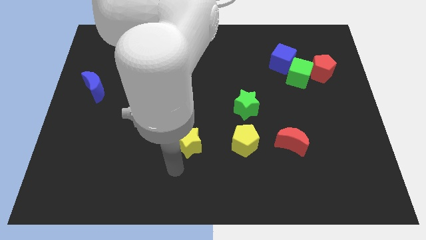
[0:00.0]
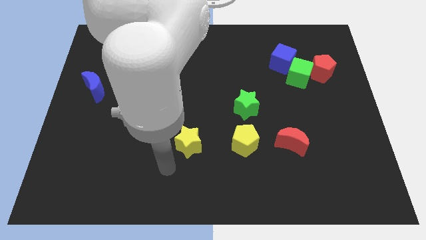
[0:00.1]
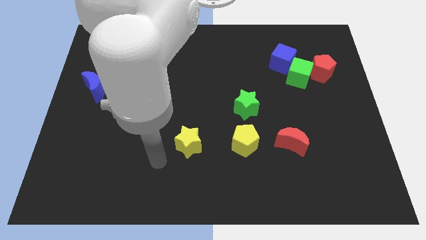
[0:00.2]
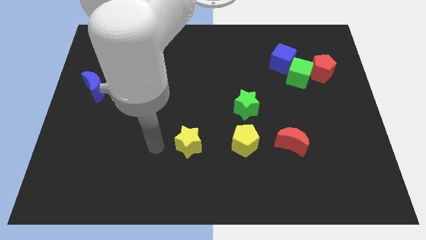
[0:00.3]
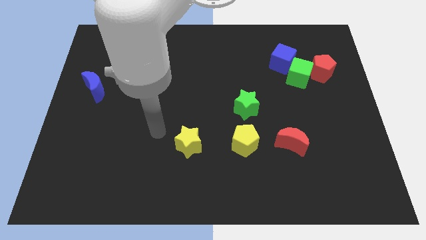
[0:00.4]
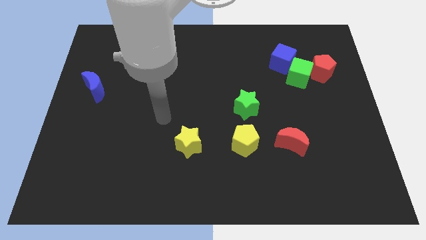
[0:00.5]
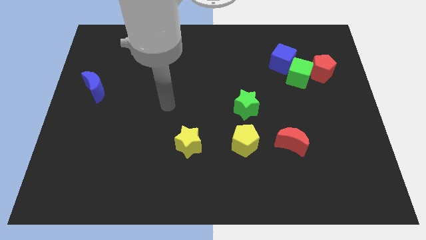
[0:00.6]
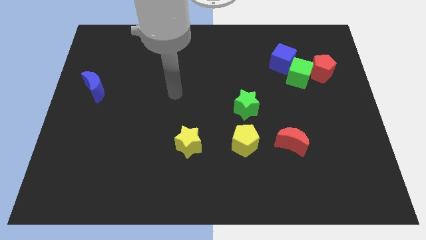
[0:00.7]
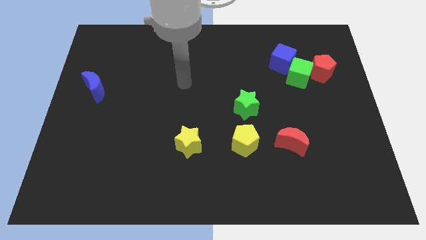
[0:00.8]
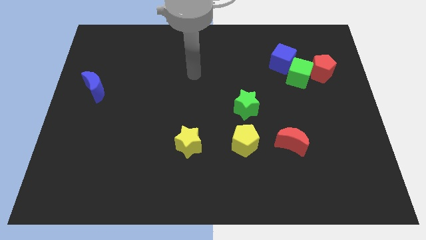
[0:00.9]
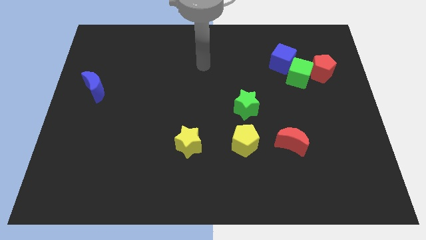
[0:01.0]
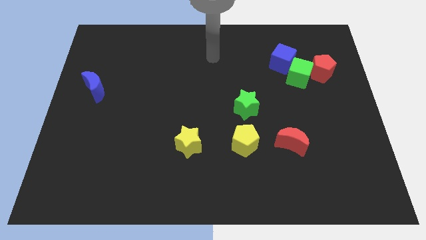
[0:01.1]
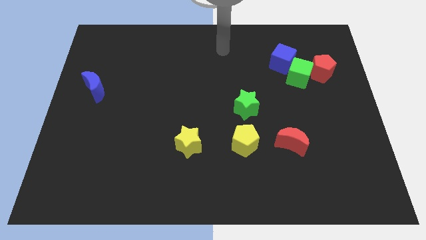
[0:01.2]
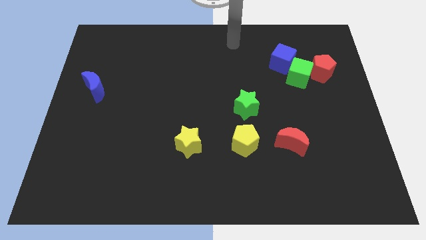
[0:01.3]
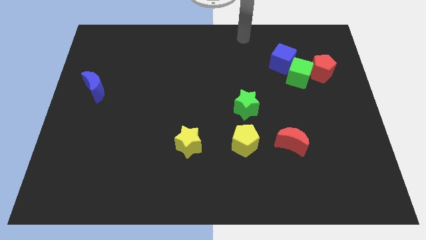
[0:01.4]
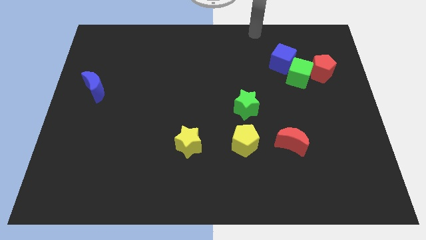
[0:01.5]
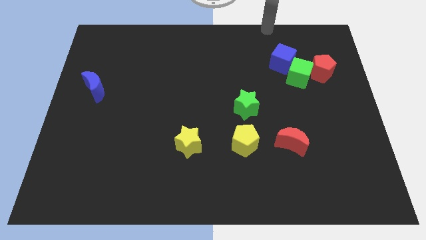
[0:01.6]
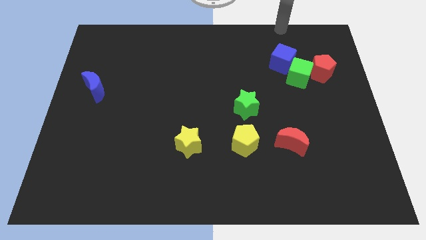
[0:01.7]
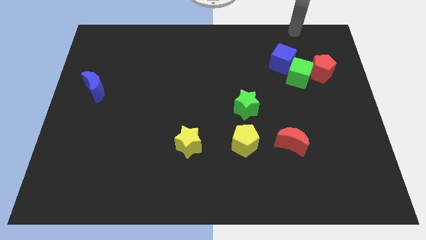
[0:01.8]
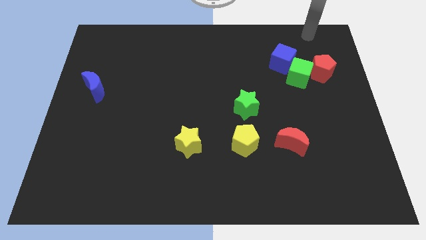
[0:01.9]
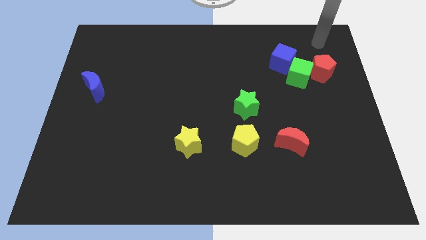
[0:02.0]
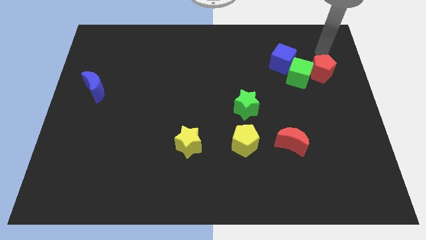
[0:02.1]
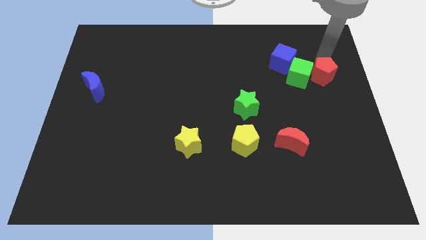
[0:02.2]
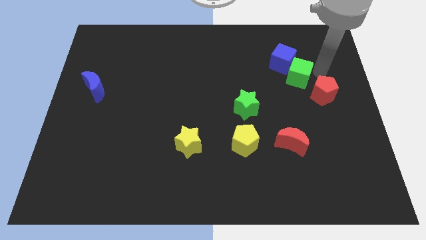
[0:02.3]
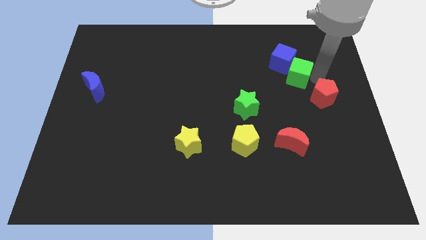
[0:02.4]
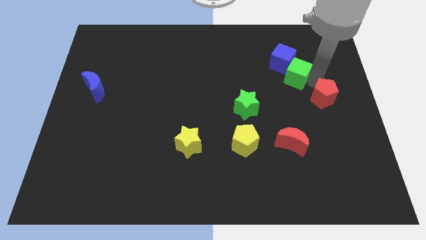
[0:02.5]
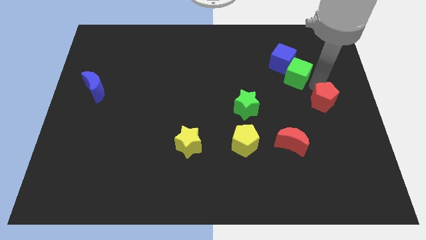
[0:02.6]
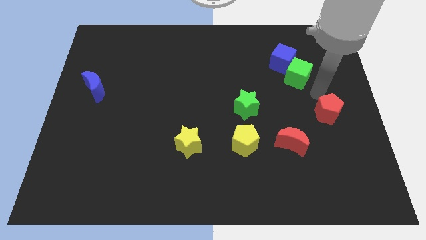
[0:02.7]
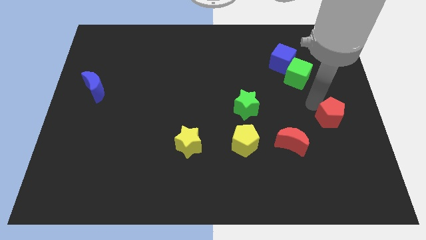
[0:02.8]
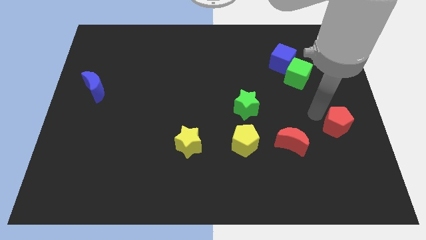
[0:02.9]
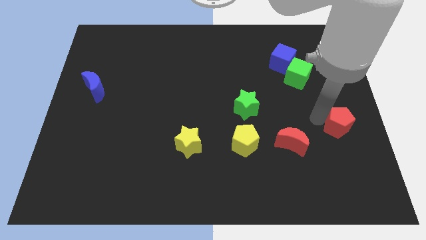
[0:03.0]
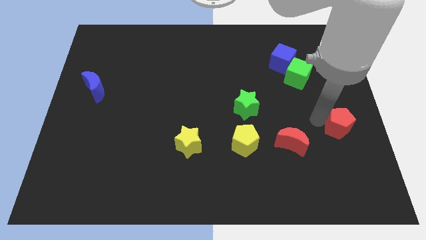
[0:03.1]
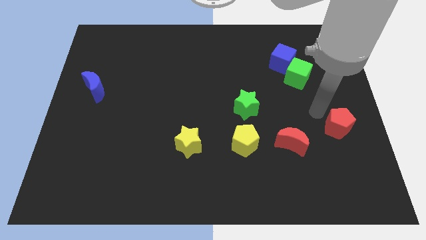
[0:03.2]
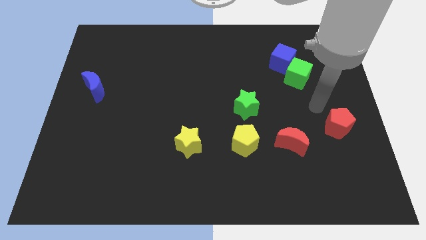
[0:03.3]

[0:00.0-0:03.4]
separate the red pentagon from the green cube

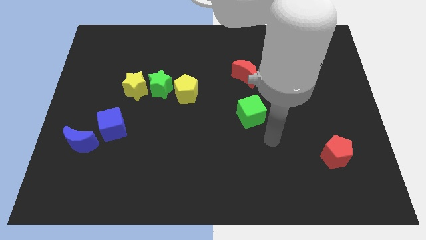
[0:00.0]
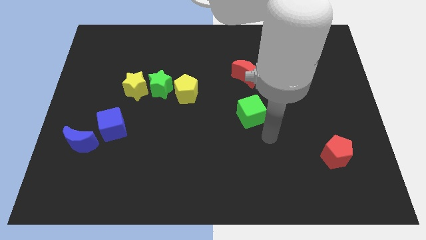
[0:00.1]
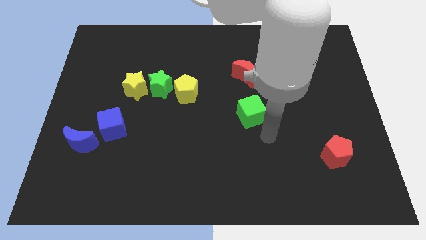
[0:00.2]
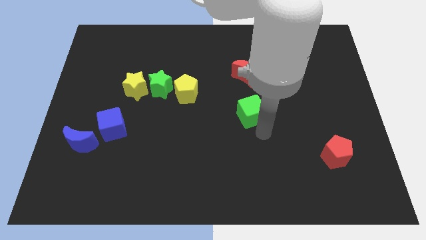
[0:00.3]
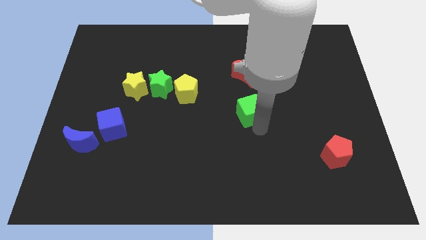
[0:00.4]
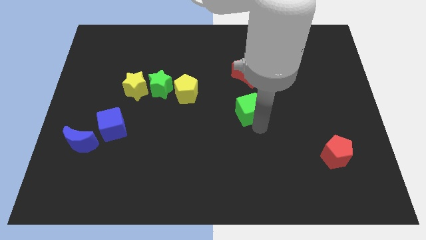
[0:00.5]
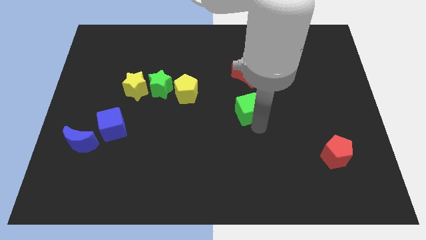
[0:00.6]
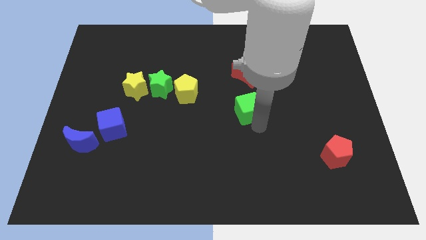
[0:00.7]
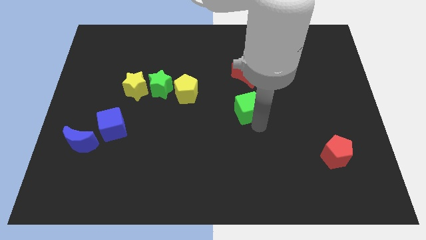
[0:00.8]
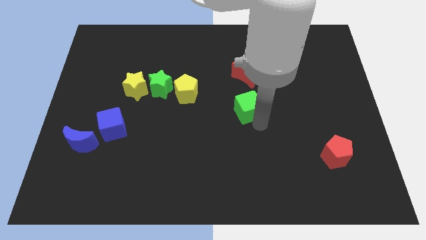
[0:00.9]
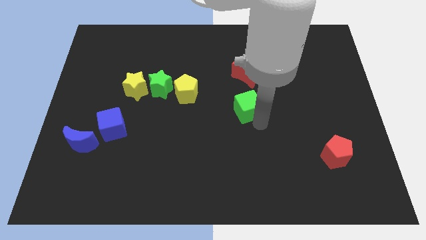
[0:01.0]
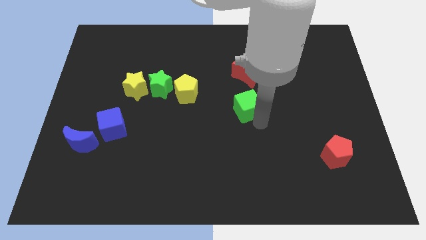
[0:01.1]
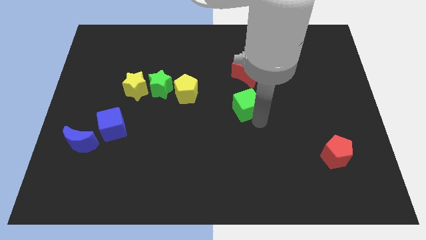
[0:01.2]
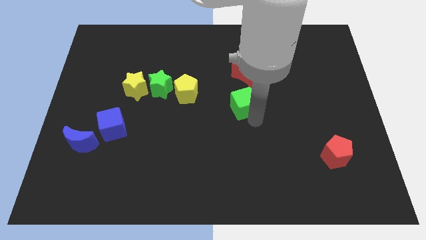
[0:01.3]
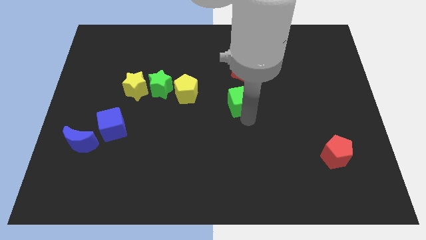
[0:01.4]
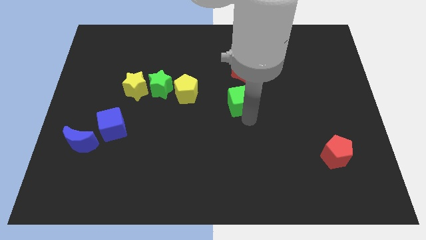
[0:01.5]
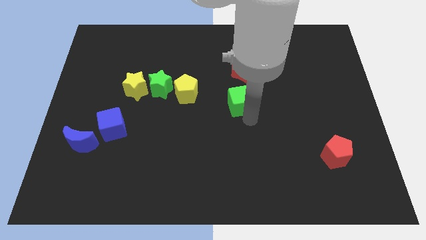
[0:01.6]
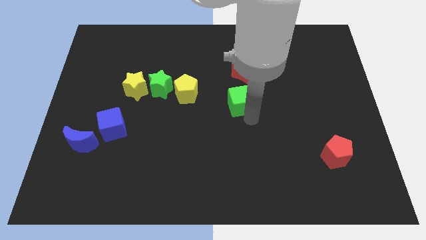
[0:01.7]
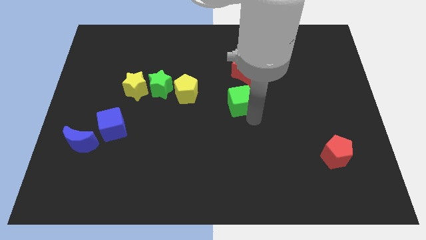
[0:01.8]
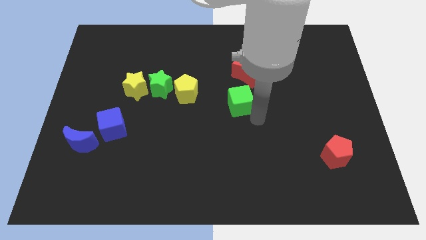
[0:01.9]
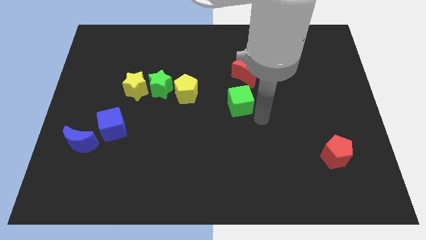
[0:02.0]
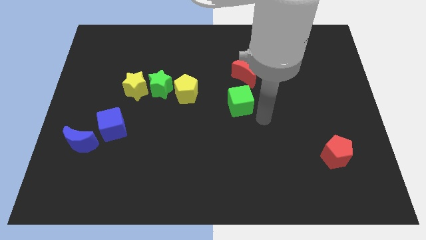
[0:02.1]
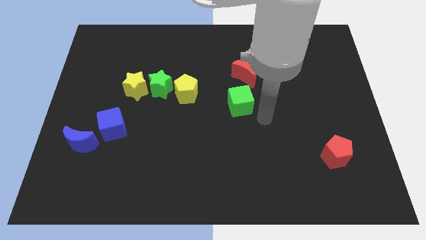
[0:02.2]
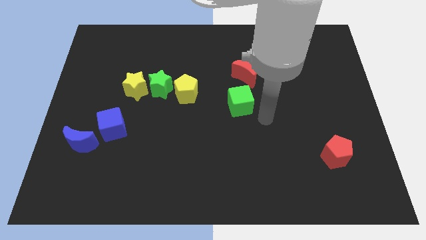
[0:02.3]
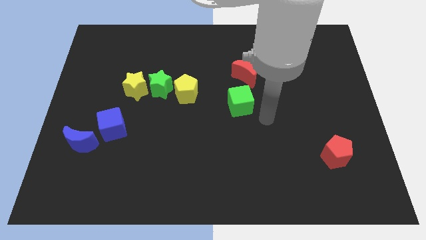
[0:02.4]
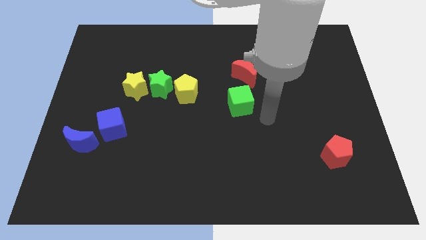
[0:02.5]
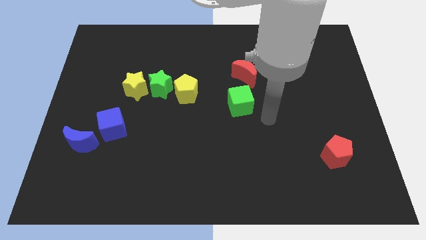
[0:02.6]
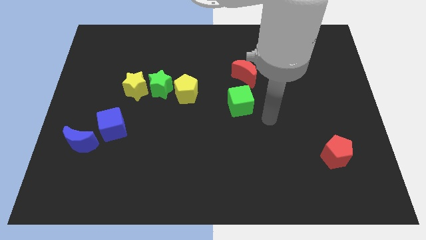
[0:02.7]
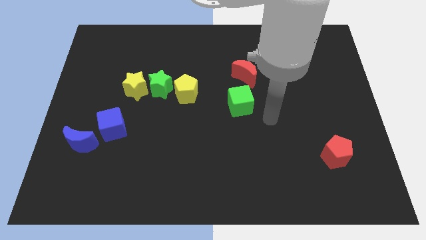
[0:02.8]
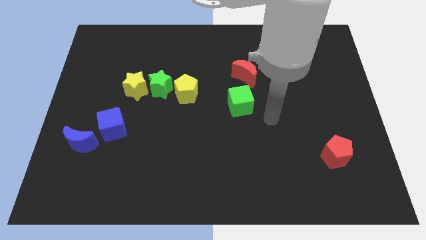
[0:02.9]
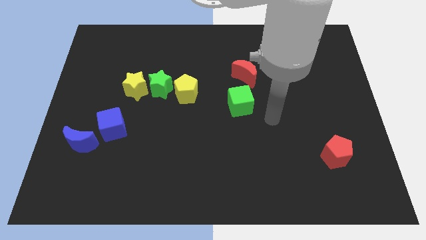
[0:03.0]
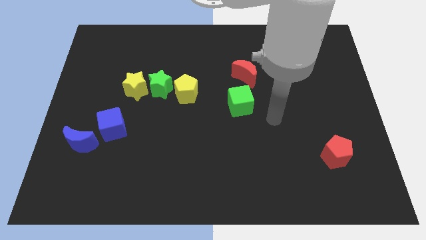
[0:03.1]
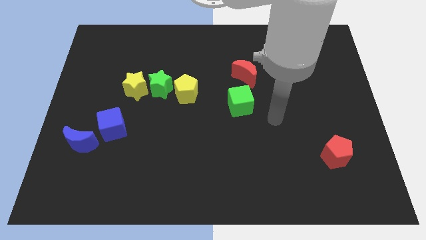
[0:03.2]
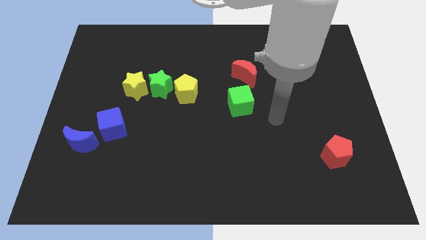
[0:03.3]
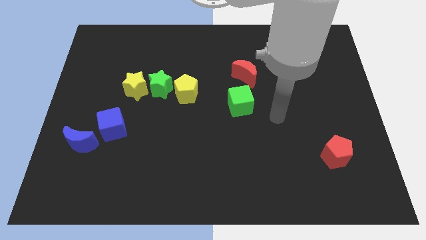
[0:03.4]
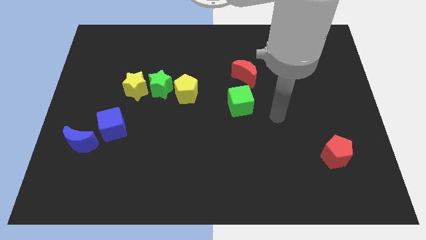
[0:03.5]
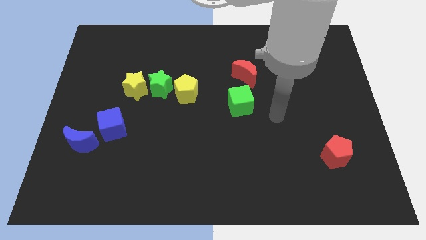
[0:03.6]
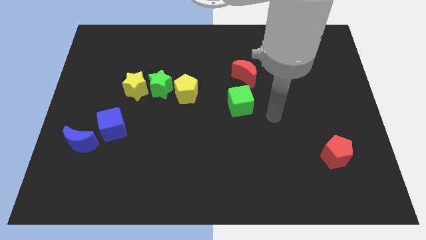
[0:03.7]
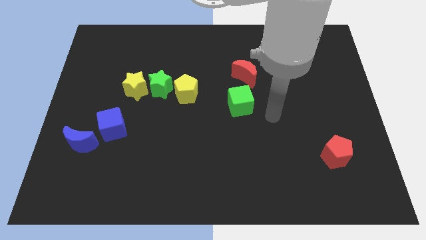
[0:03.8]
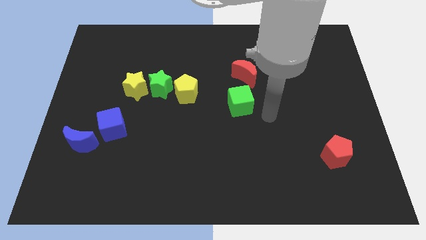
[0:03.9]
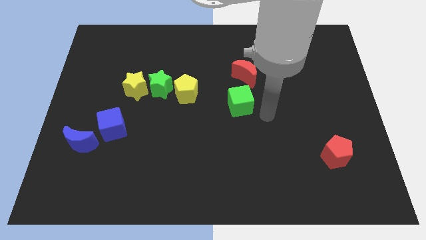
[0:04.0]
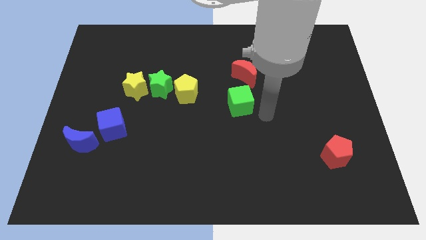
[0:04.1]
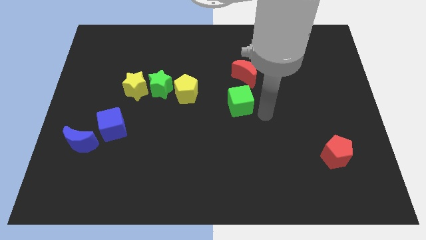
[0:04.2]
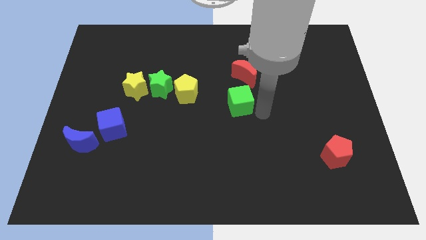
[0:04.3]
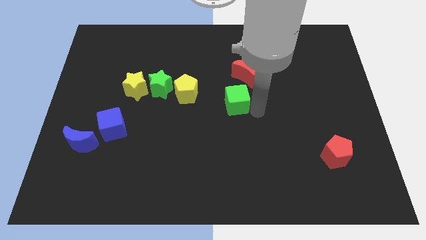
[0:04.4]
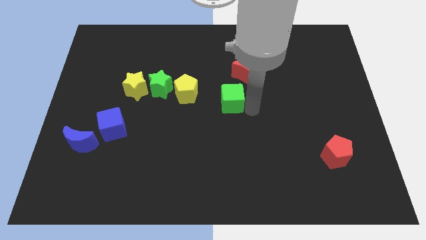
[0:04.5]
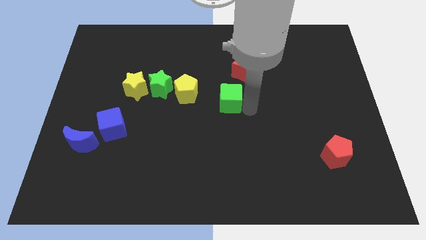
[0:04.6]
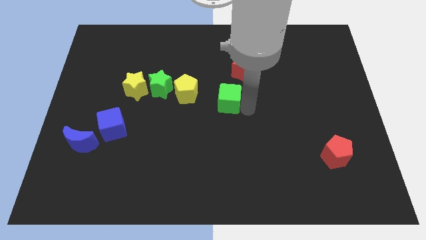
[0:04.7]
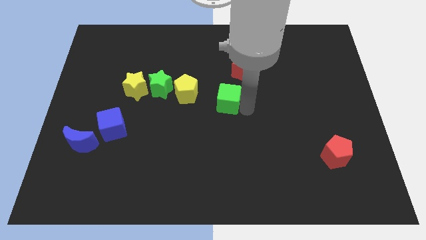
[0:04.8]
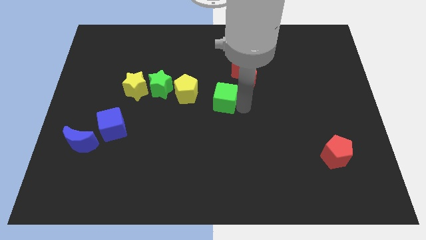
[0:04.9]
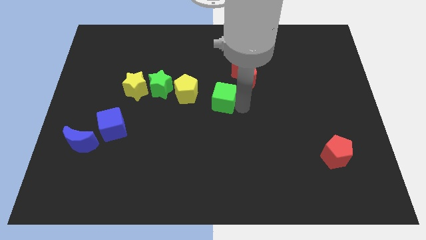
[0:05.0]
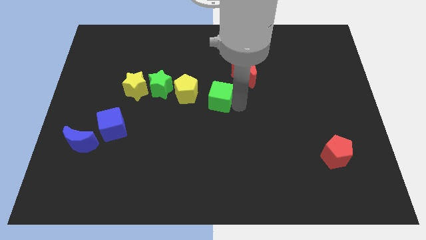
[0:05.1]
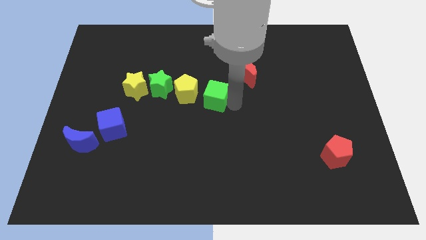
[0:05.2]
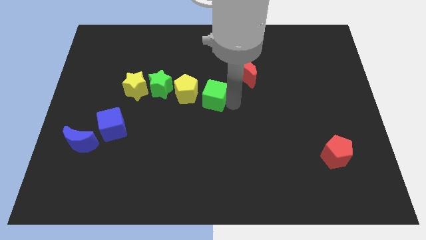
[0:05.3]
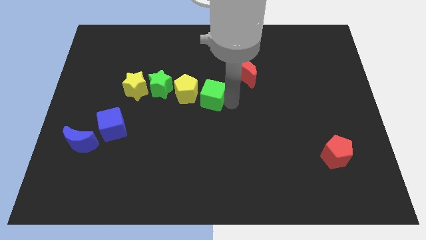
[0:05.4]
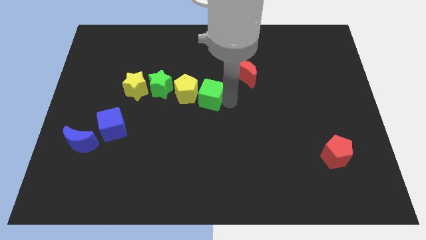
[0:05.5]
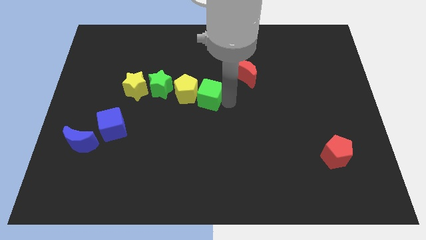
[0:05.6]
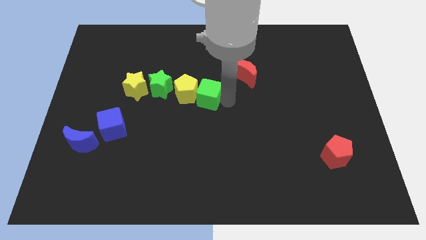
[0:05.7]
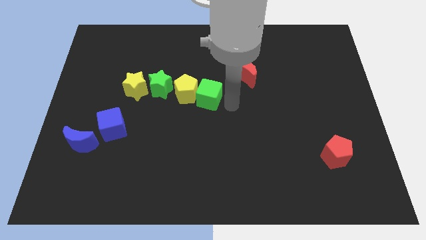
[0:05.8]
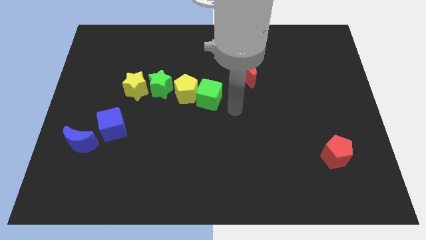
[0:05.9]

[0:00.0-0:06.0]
push the green cube into the yellow pentagon
